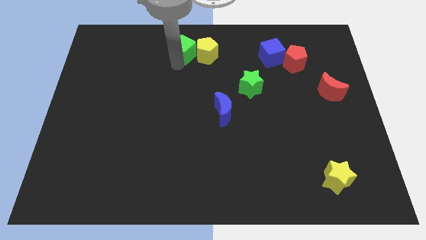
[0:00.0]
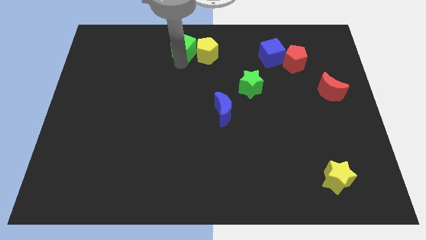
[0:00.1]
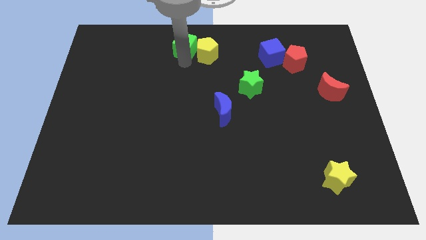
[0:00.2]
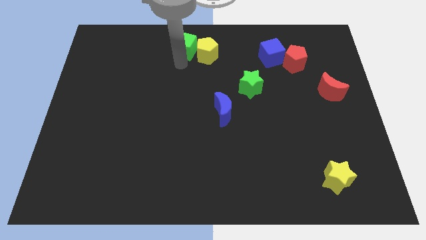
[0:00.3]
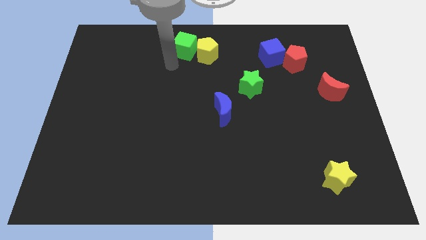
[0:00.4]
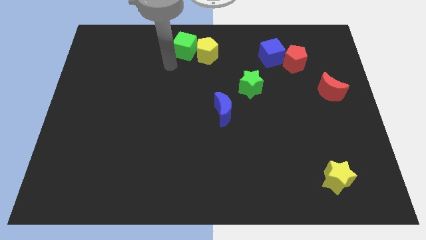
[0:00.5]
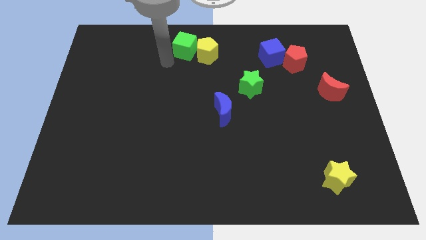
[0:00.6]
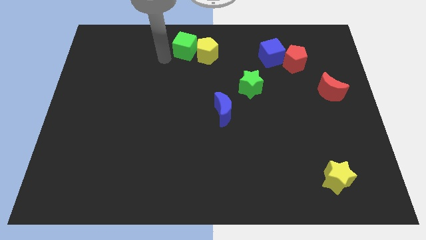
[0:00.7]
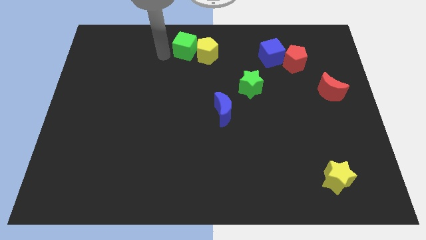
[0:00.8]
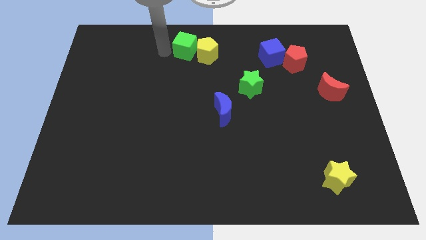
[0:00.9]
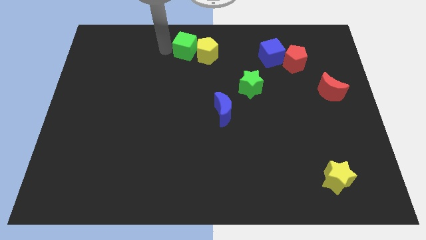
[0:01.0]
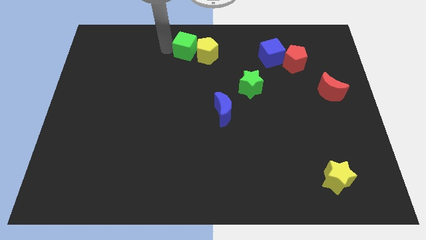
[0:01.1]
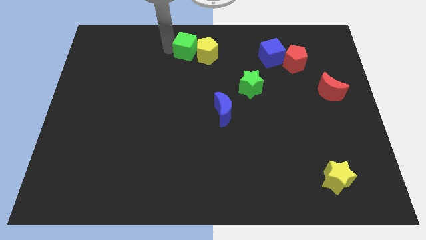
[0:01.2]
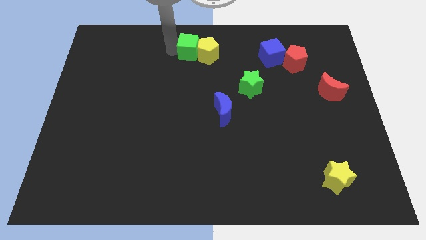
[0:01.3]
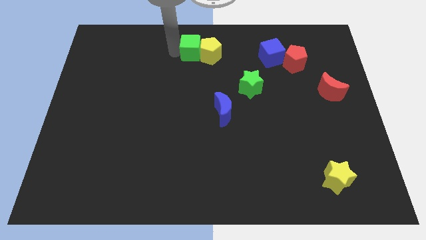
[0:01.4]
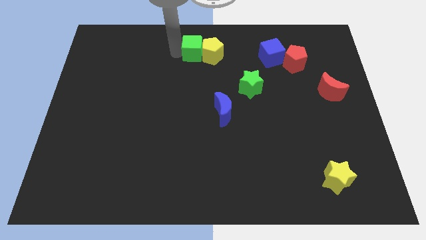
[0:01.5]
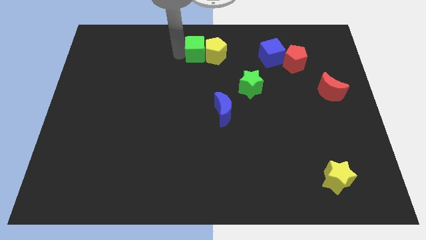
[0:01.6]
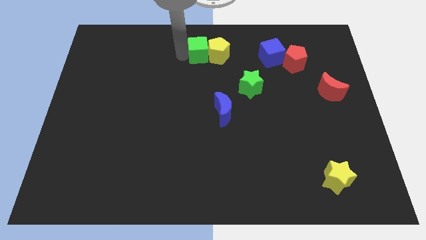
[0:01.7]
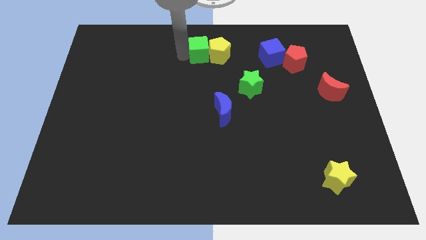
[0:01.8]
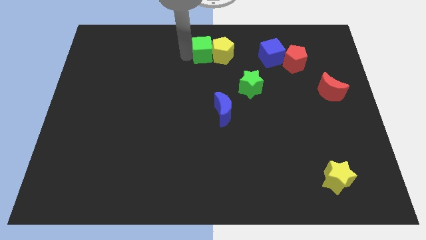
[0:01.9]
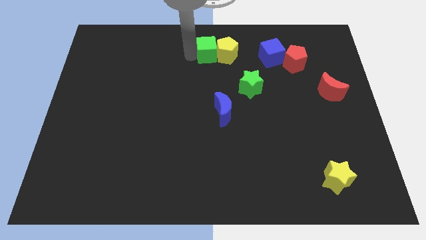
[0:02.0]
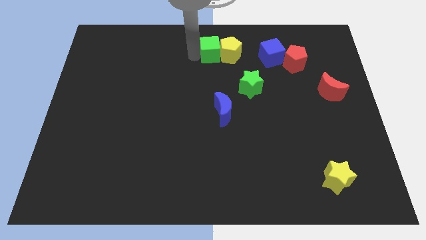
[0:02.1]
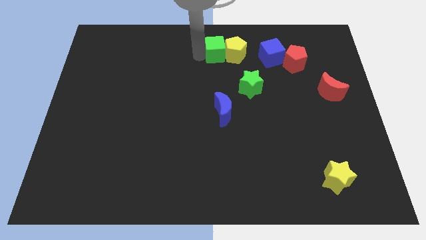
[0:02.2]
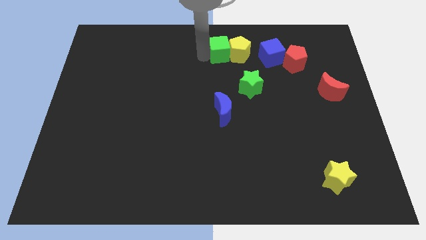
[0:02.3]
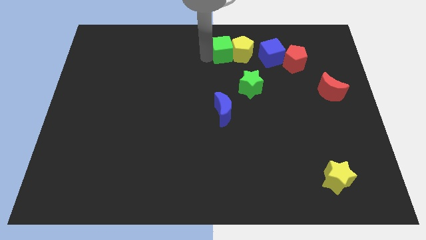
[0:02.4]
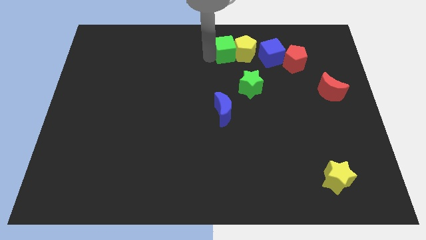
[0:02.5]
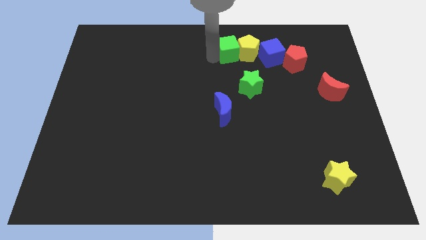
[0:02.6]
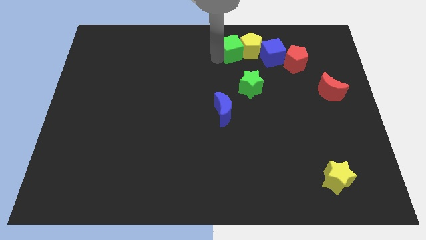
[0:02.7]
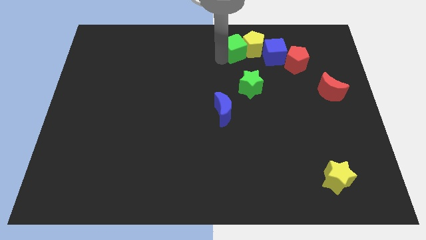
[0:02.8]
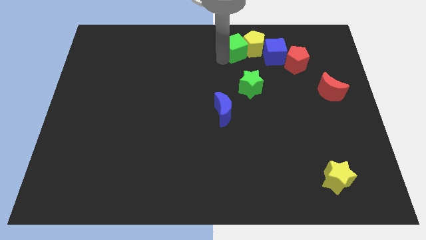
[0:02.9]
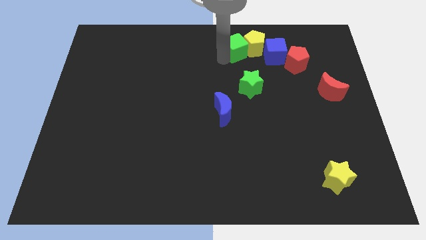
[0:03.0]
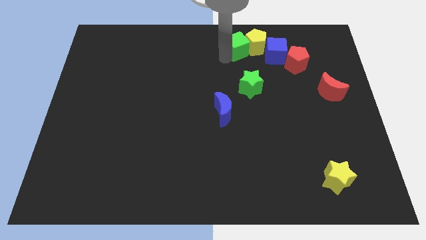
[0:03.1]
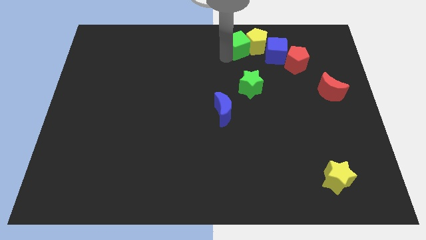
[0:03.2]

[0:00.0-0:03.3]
move the green cube and yellow pentagon into the left side of the blue cube

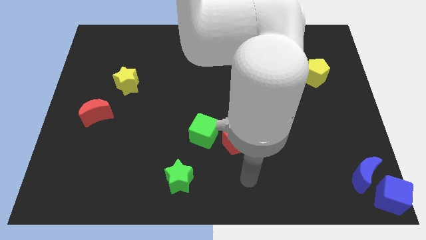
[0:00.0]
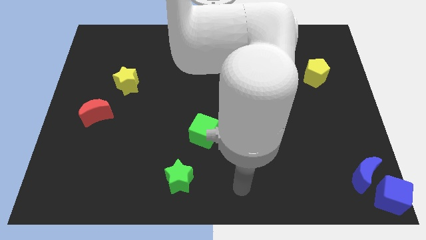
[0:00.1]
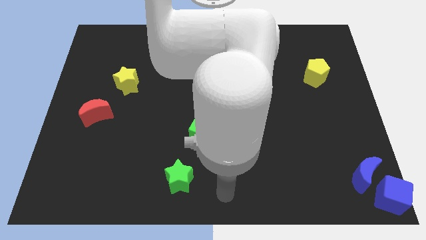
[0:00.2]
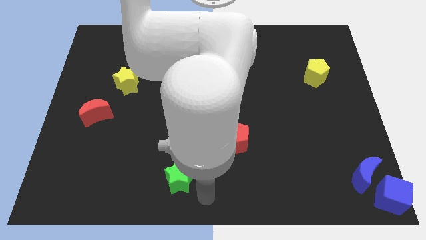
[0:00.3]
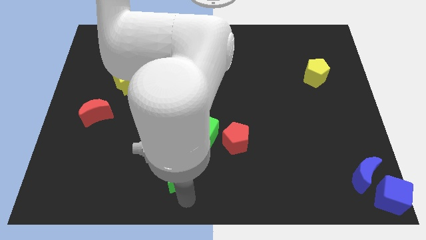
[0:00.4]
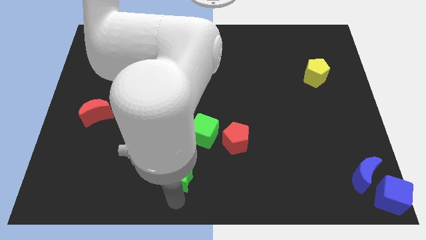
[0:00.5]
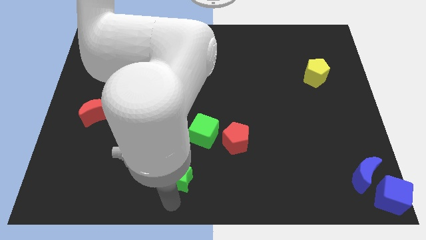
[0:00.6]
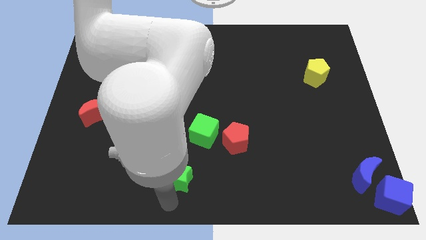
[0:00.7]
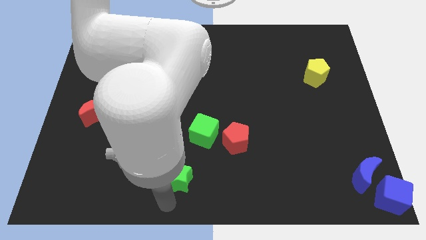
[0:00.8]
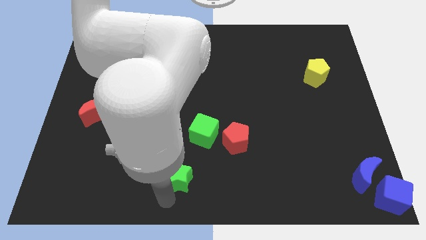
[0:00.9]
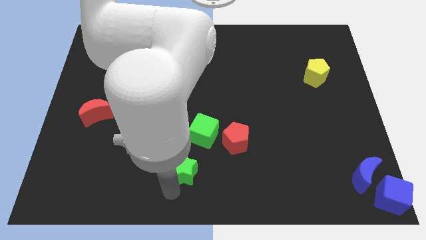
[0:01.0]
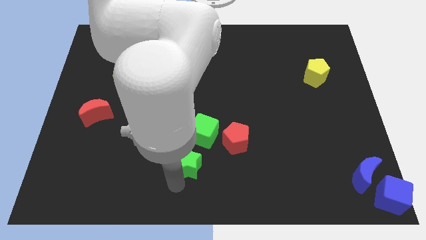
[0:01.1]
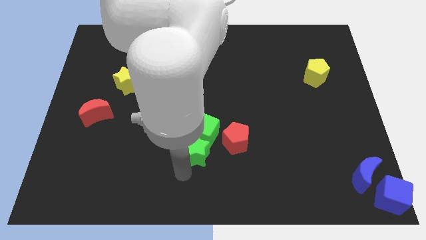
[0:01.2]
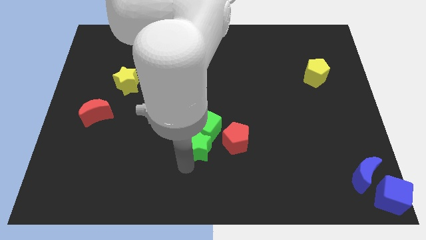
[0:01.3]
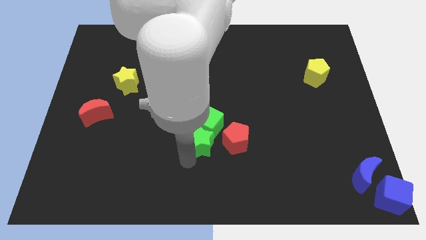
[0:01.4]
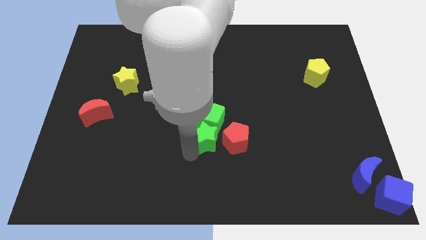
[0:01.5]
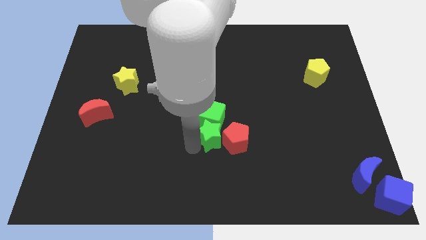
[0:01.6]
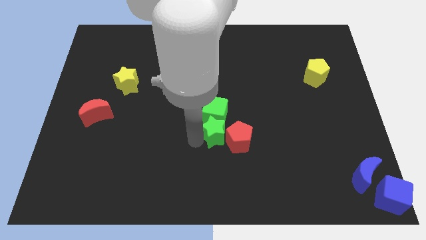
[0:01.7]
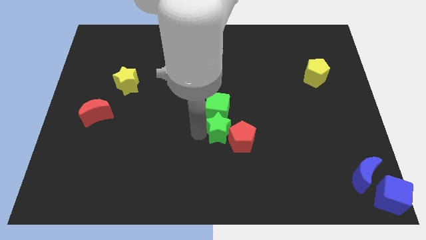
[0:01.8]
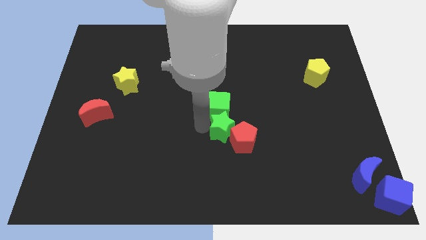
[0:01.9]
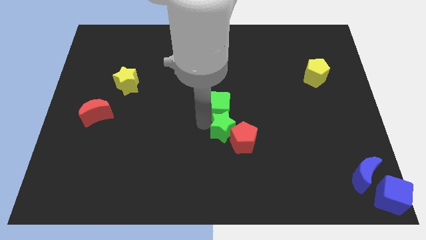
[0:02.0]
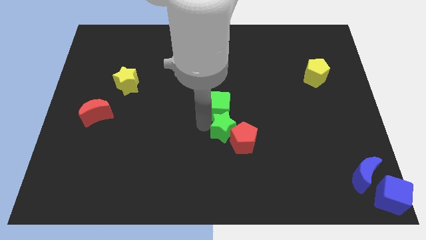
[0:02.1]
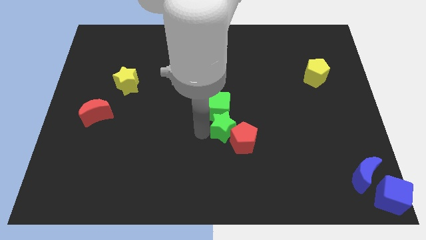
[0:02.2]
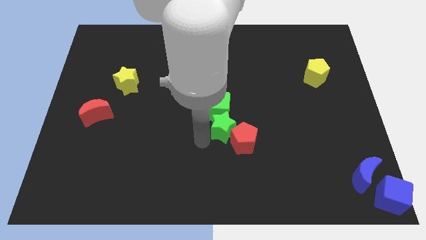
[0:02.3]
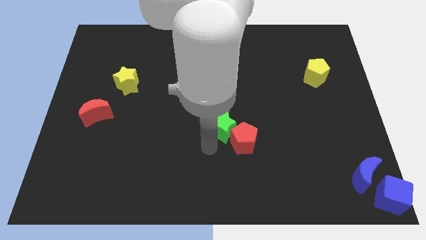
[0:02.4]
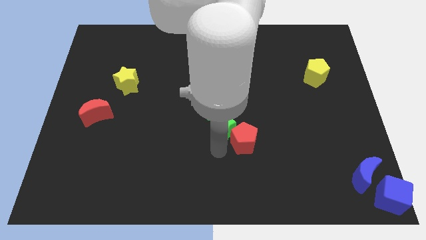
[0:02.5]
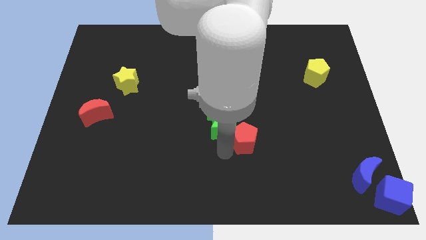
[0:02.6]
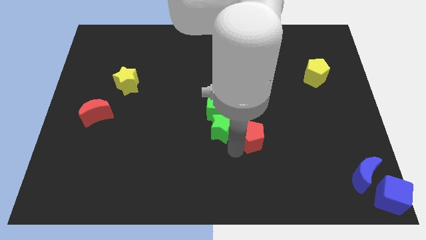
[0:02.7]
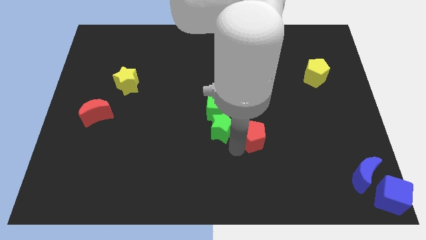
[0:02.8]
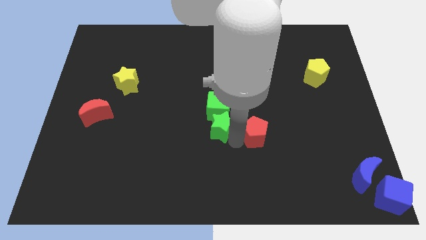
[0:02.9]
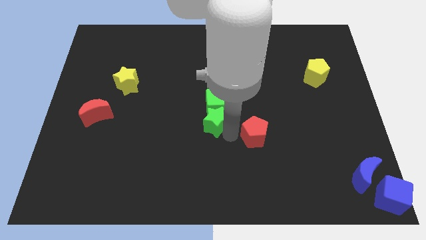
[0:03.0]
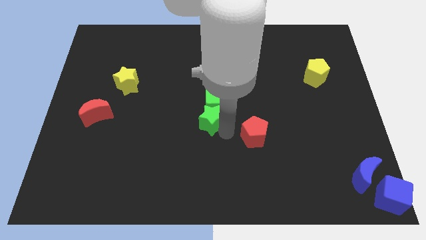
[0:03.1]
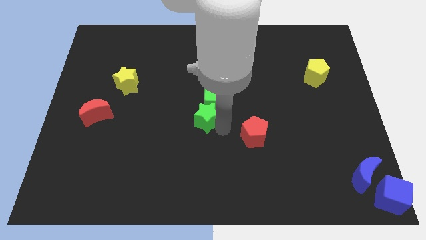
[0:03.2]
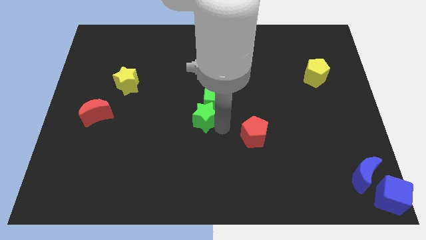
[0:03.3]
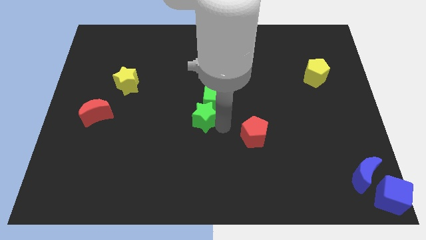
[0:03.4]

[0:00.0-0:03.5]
move green star to the center

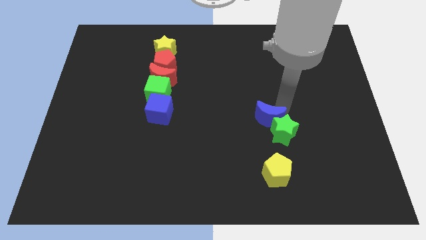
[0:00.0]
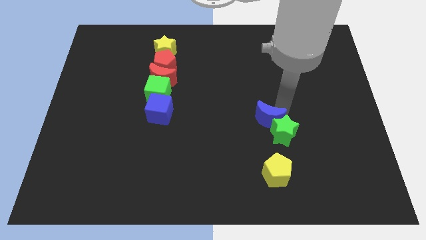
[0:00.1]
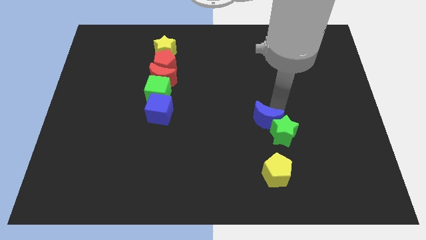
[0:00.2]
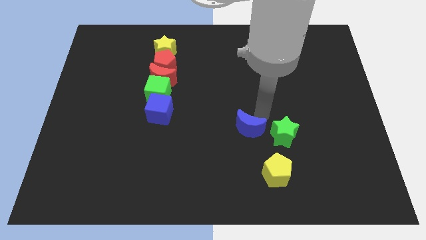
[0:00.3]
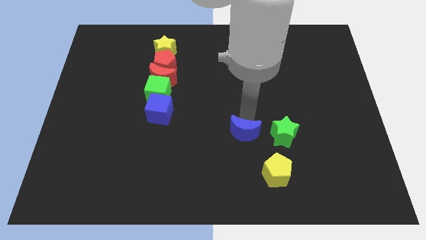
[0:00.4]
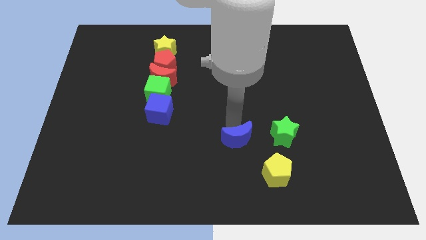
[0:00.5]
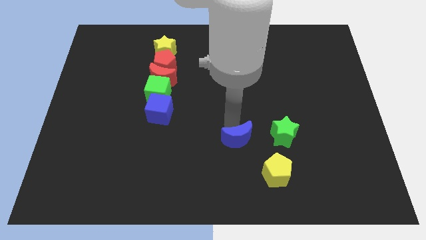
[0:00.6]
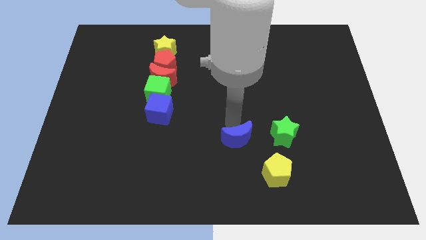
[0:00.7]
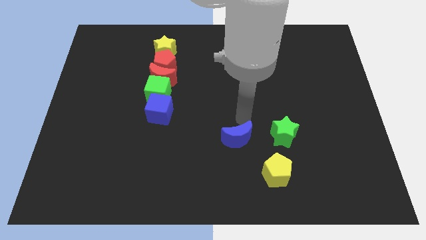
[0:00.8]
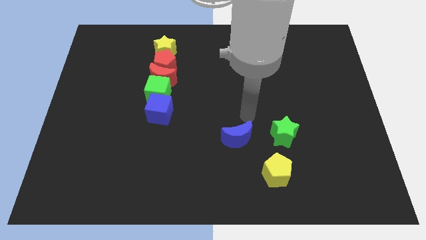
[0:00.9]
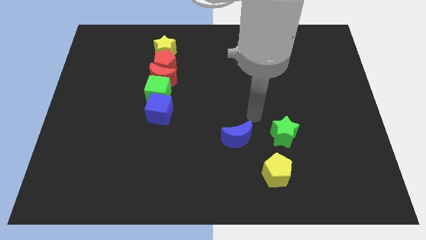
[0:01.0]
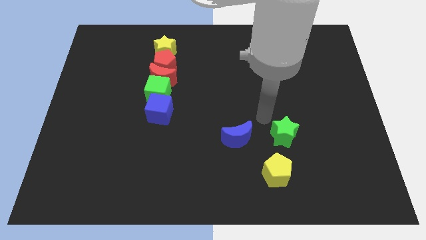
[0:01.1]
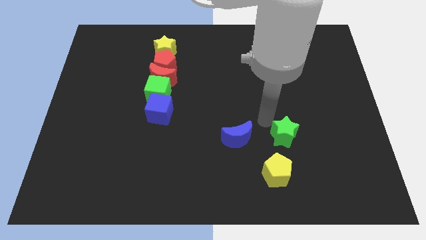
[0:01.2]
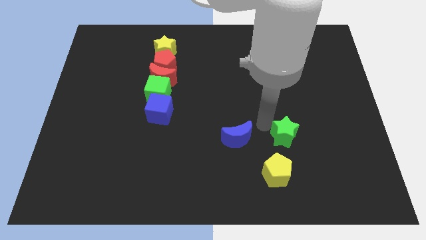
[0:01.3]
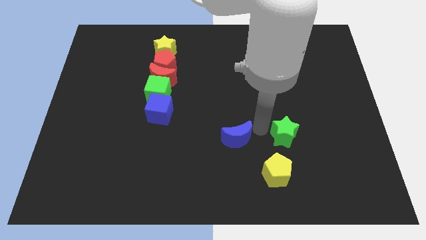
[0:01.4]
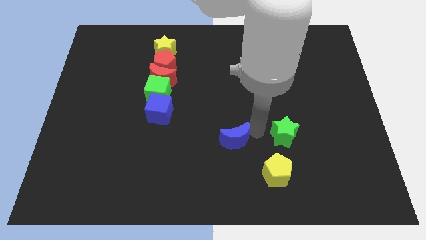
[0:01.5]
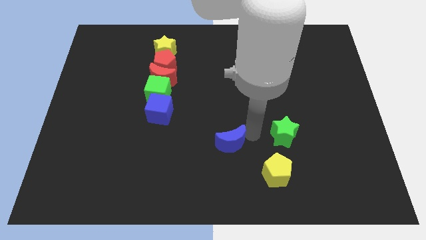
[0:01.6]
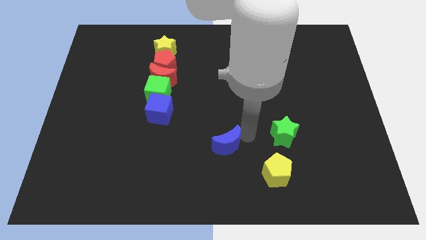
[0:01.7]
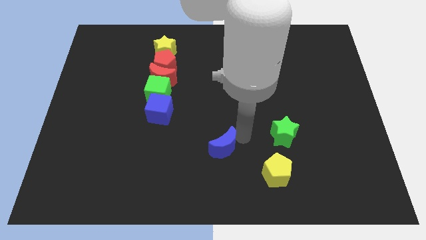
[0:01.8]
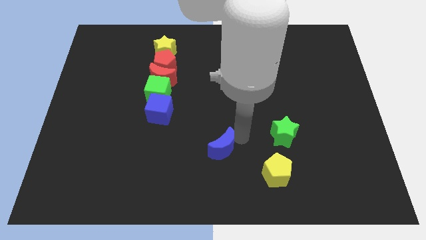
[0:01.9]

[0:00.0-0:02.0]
separate the blue moon from the green star
